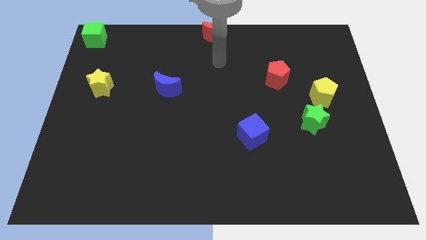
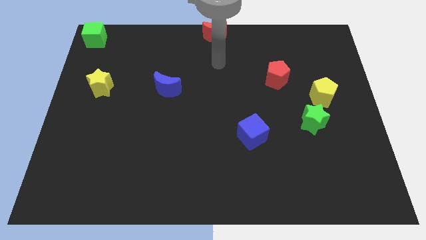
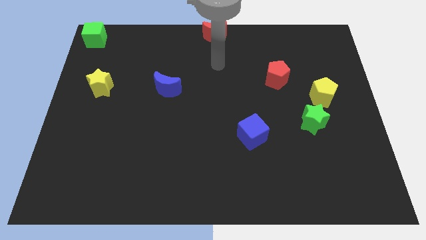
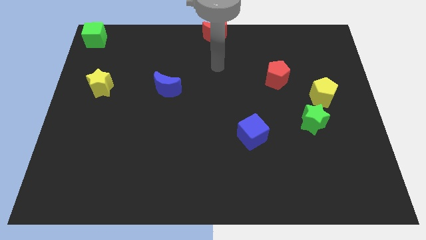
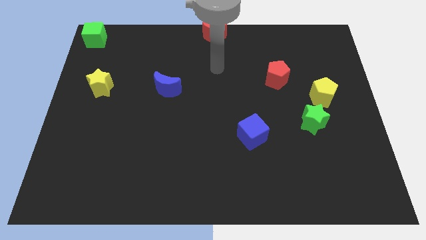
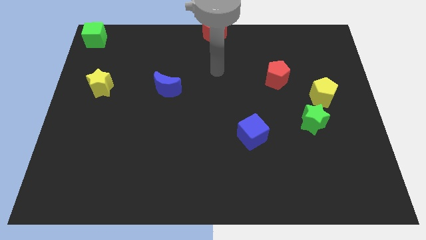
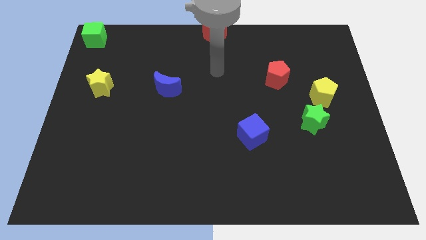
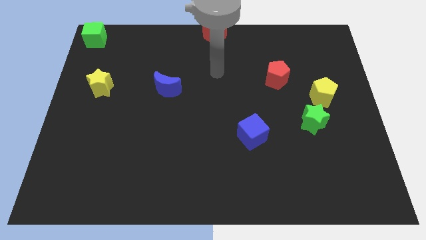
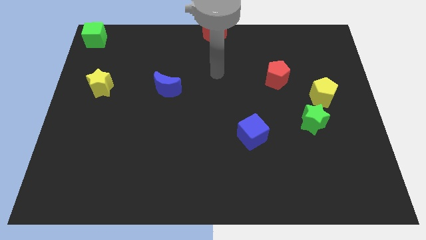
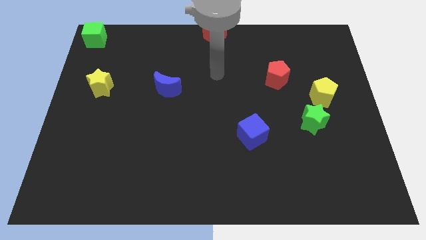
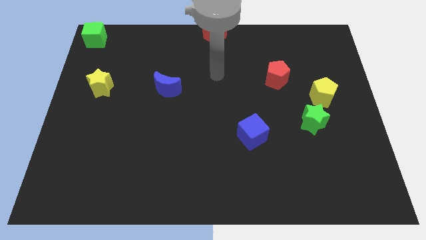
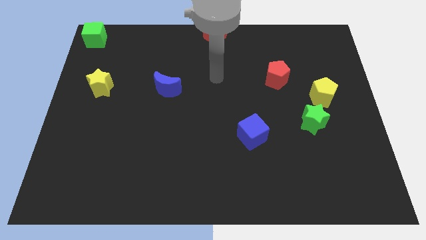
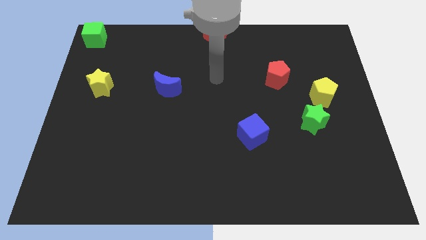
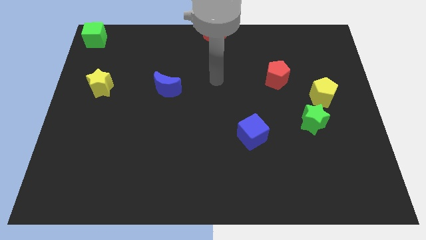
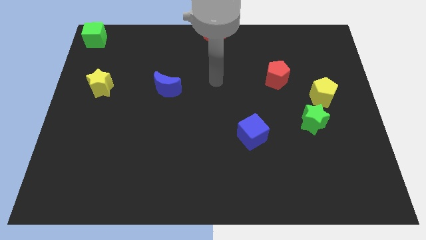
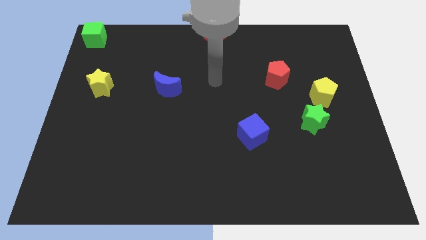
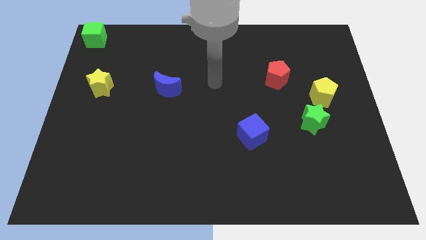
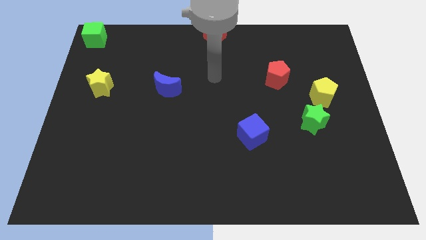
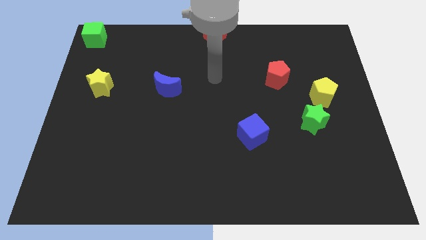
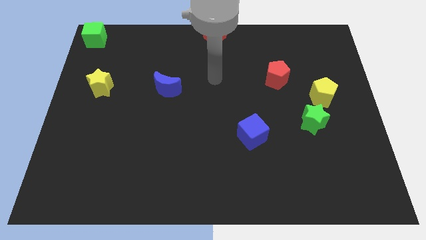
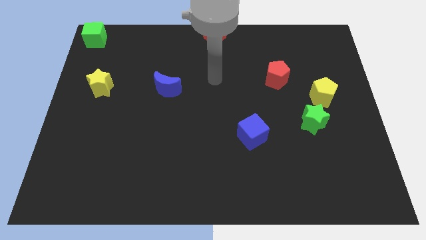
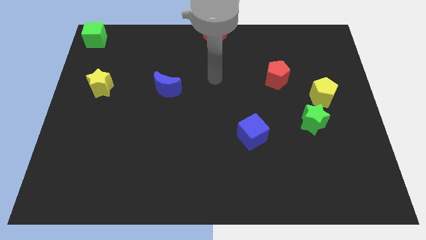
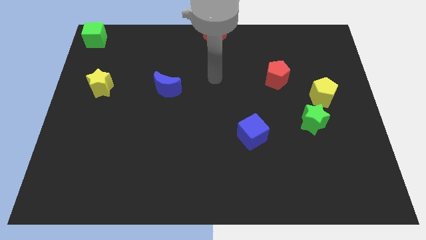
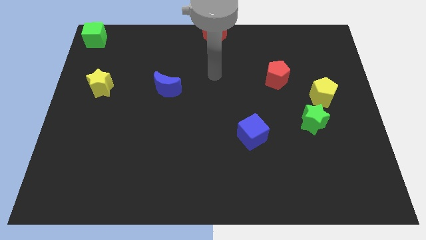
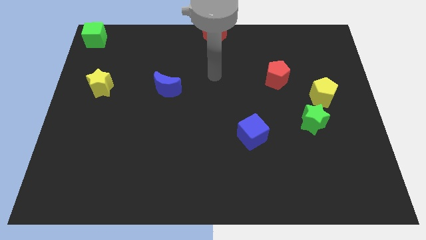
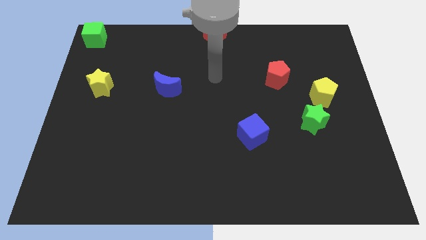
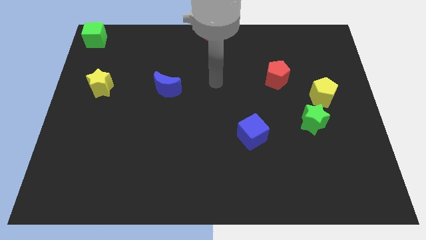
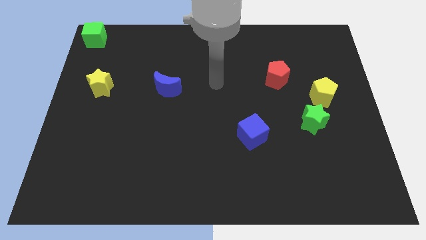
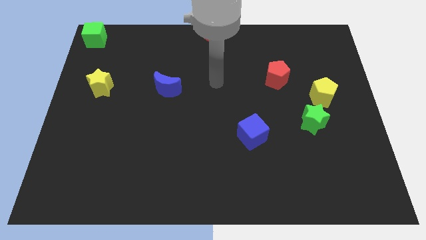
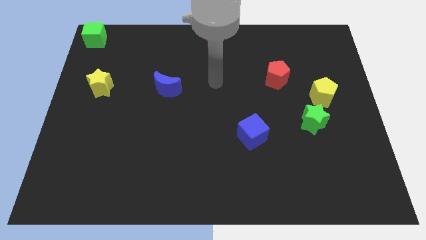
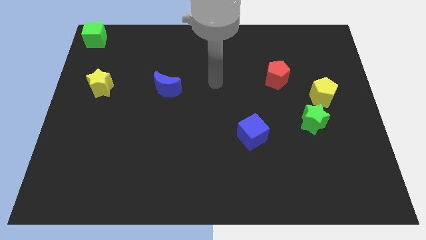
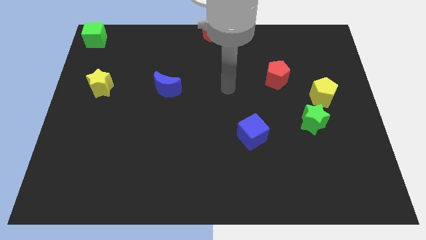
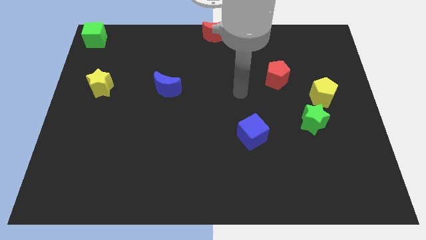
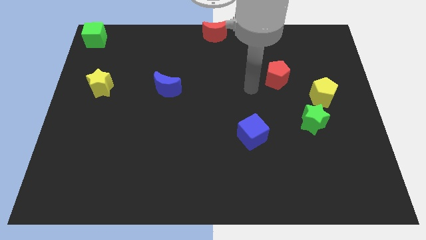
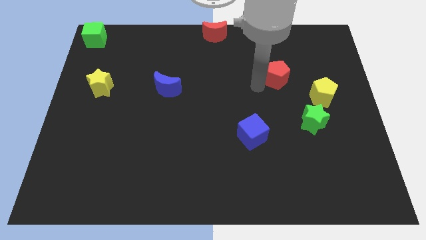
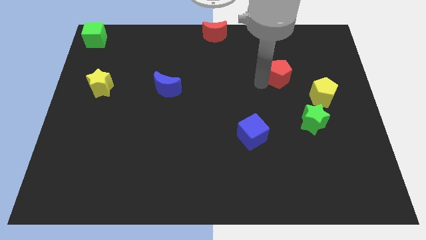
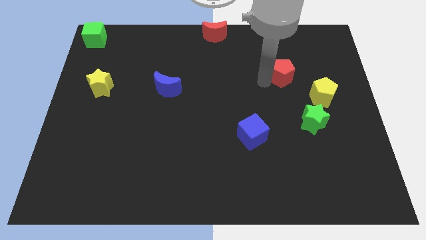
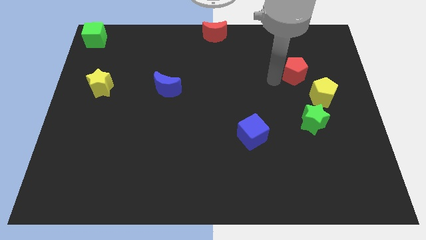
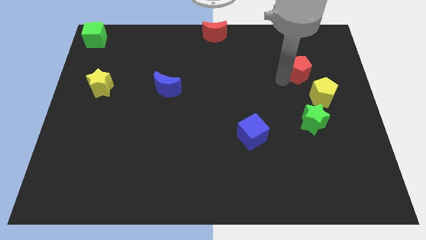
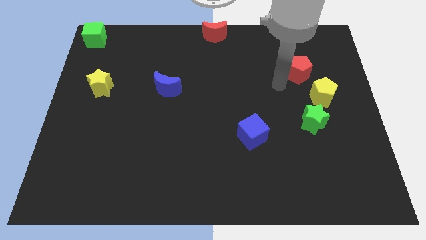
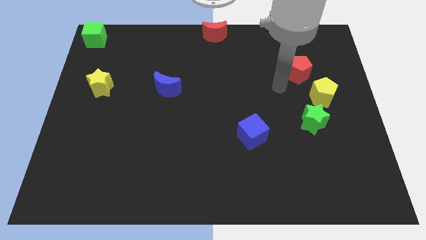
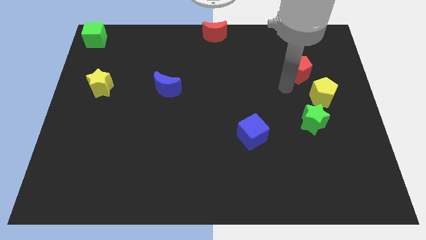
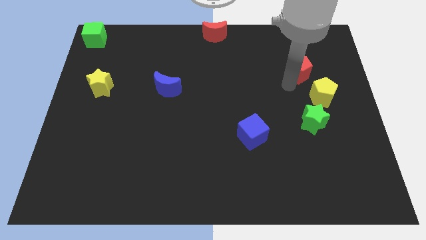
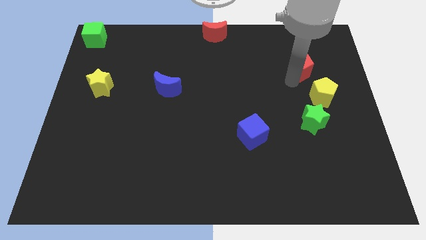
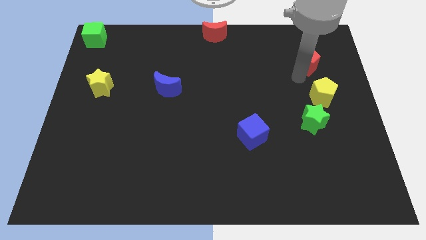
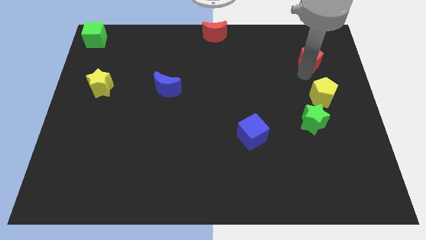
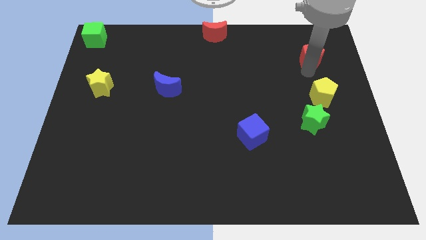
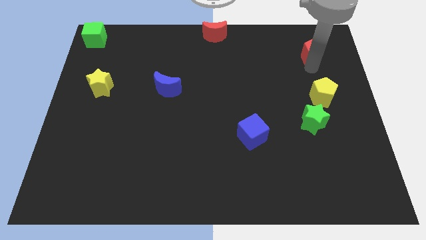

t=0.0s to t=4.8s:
place the red pentagon vertically above the yellow pentagon

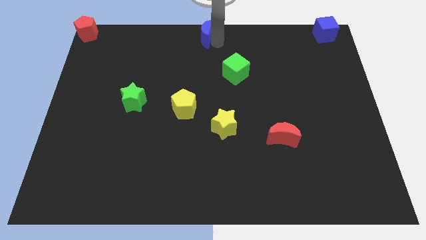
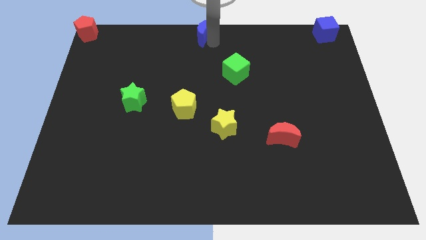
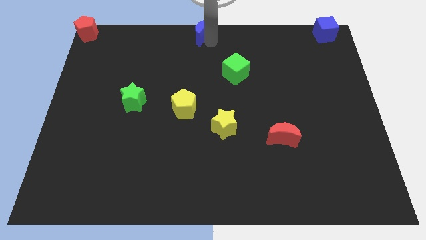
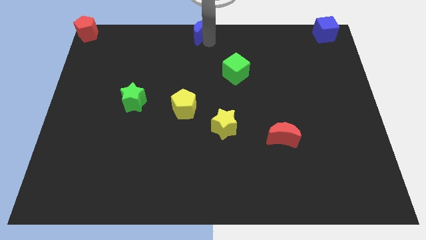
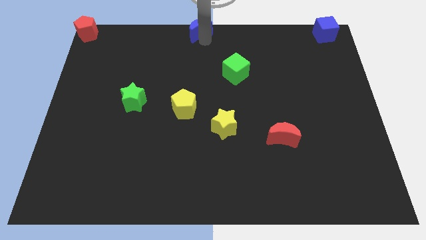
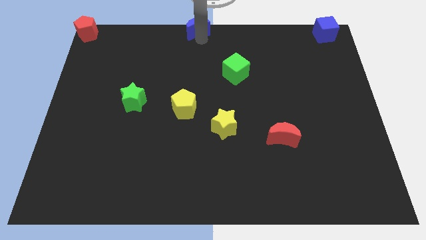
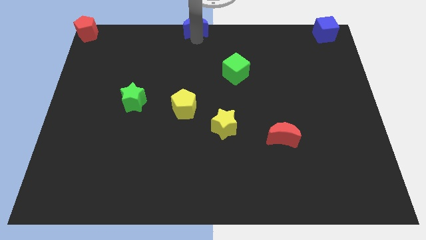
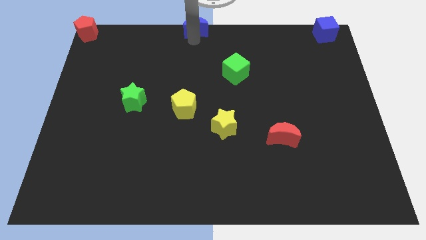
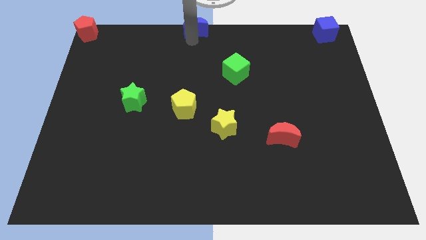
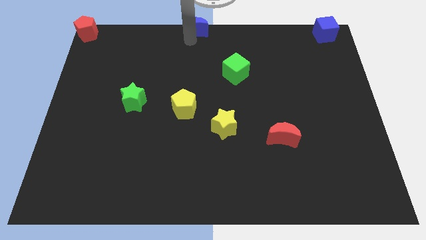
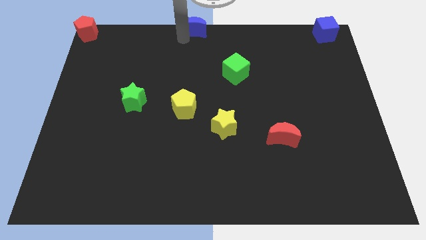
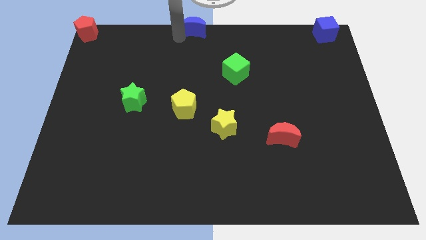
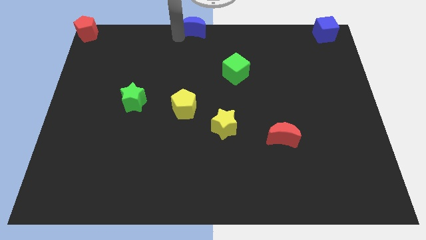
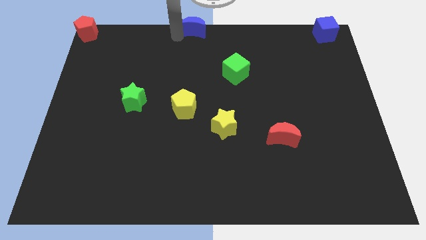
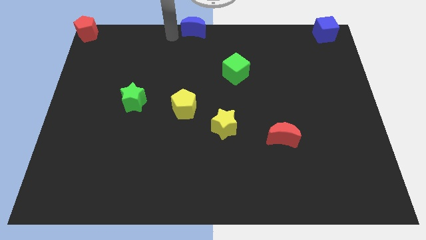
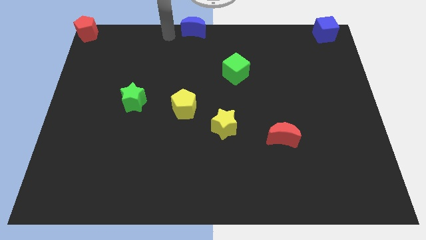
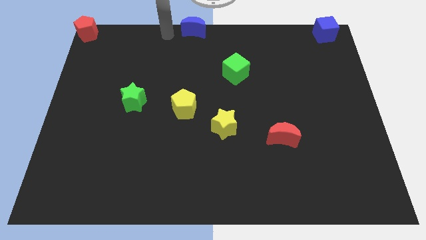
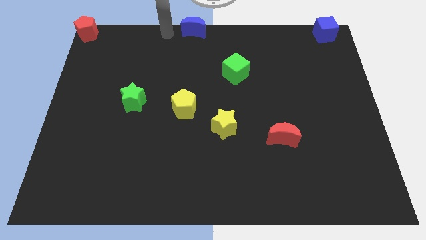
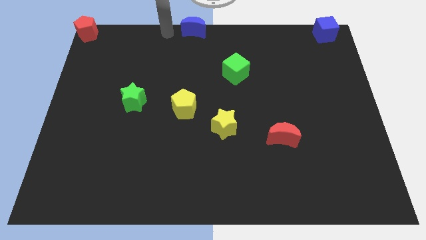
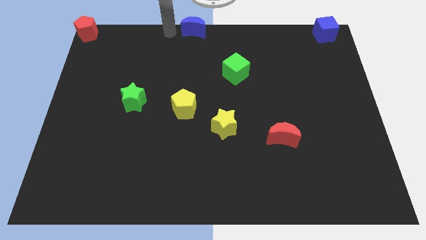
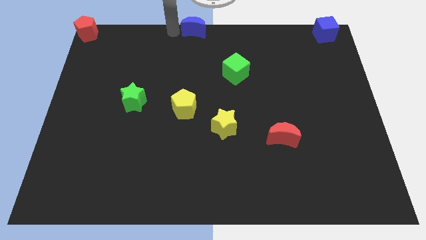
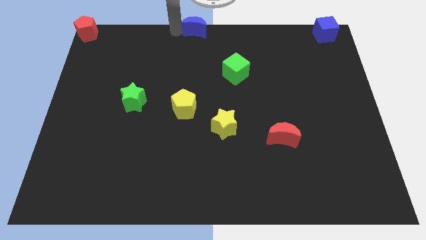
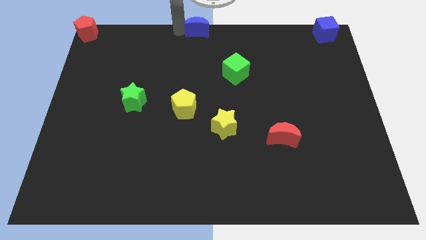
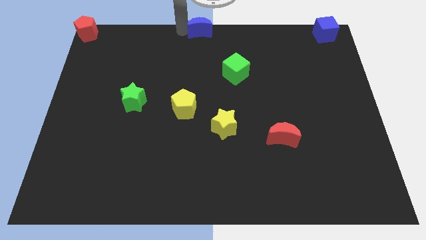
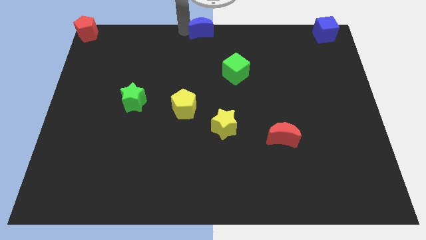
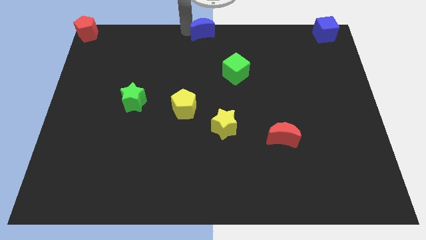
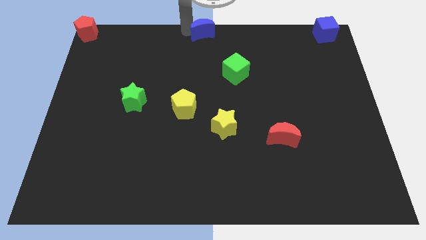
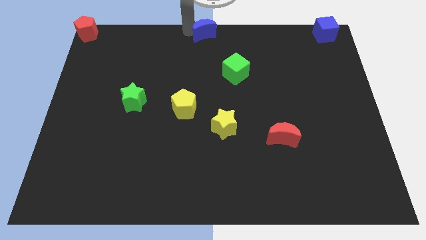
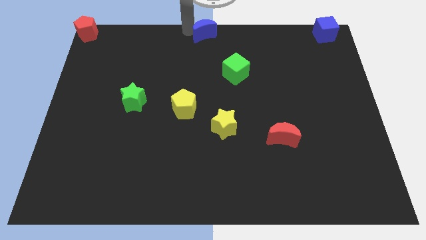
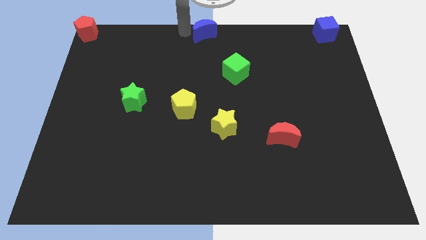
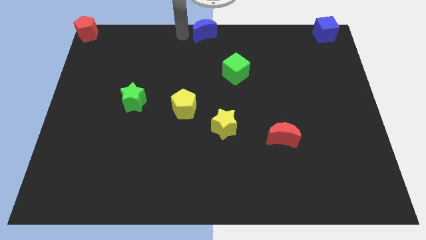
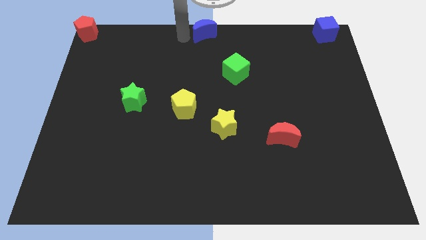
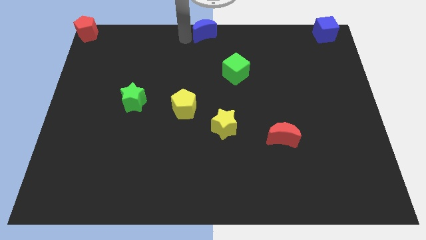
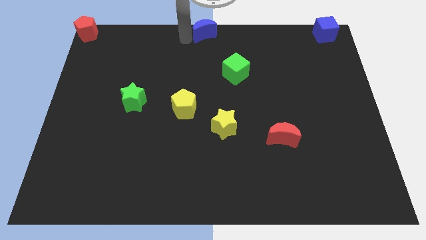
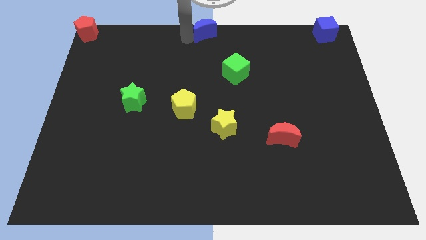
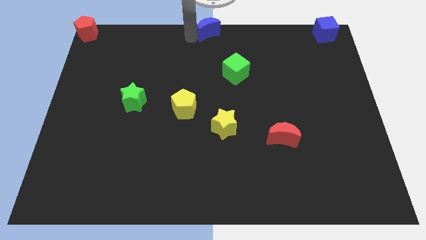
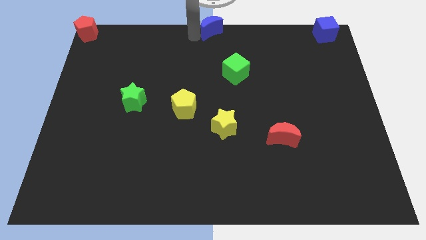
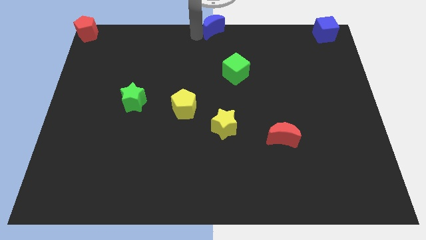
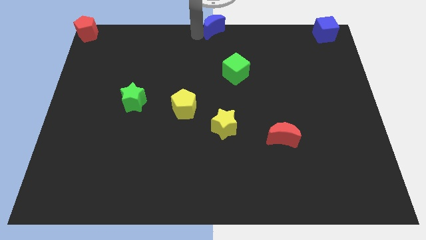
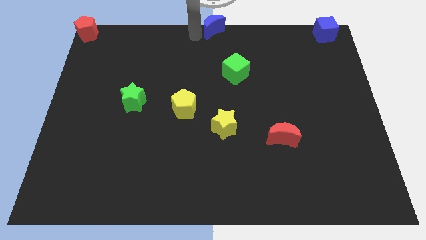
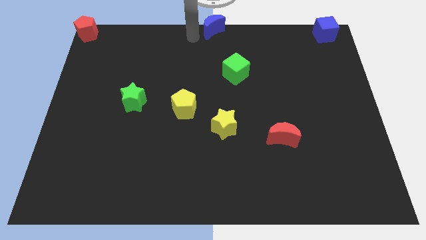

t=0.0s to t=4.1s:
adjust the blue crescent at the top center of the board
